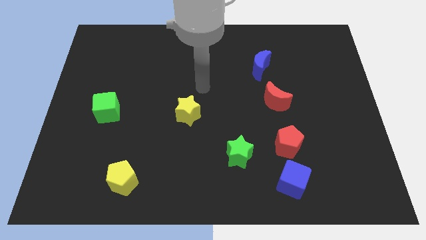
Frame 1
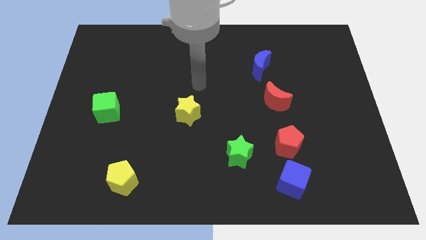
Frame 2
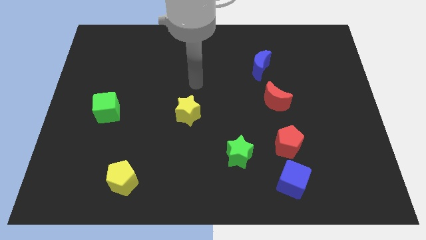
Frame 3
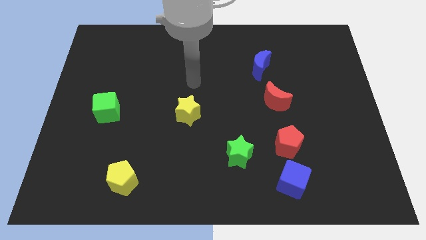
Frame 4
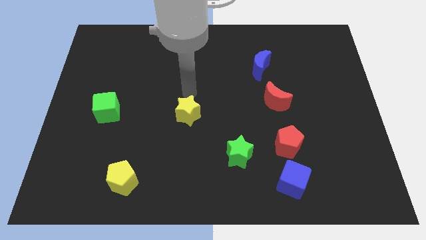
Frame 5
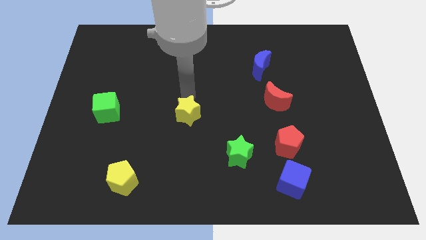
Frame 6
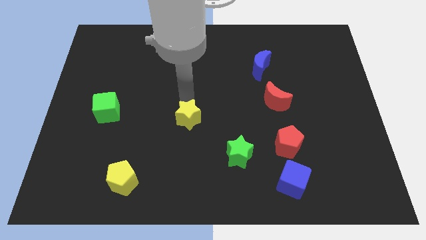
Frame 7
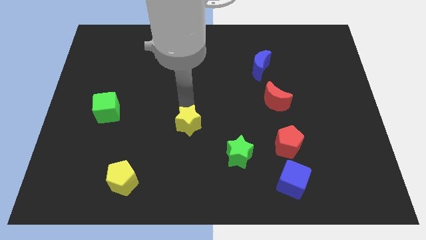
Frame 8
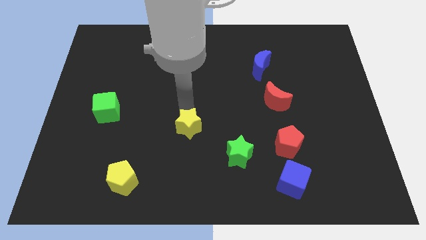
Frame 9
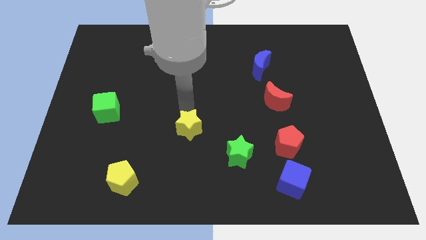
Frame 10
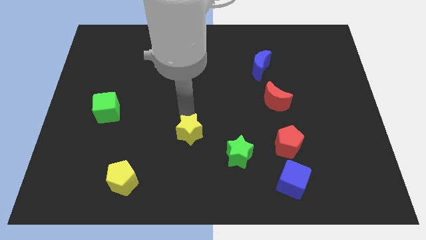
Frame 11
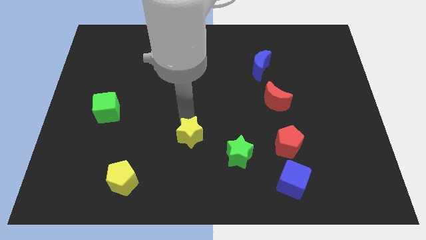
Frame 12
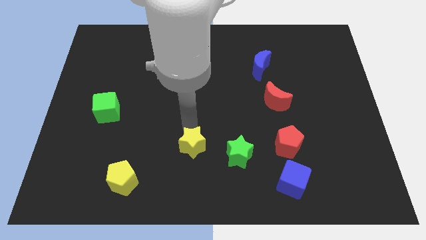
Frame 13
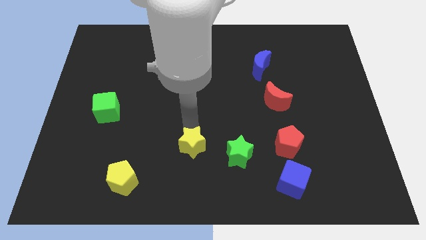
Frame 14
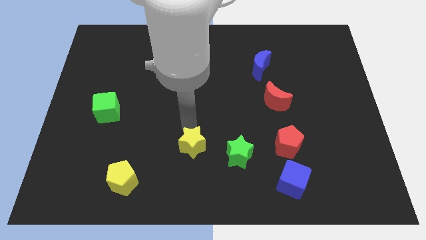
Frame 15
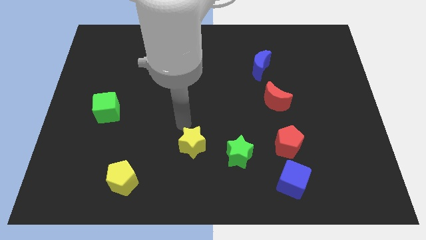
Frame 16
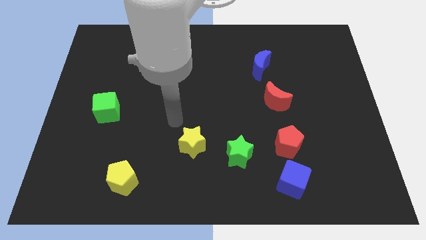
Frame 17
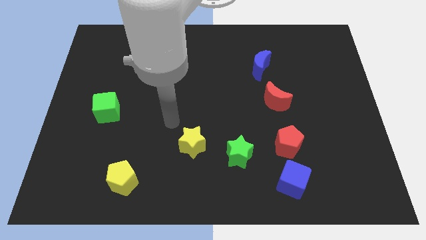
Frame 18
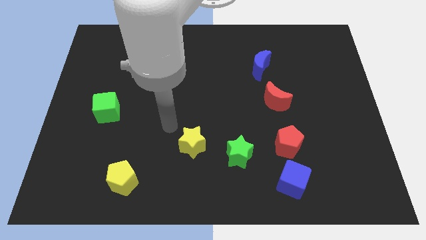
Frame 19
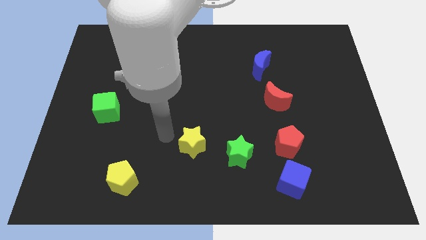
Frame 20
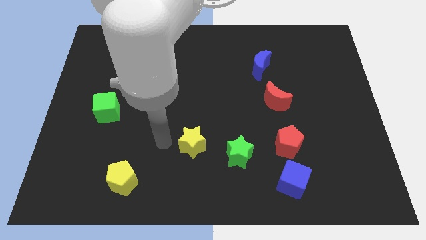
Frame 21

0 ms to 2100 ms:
move the yellow star to the left of the green star

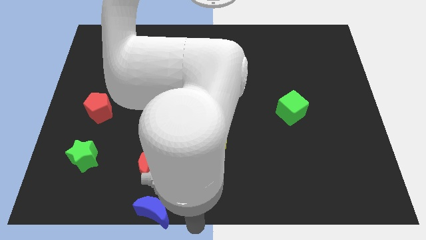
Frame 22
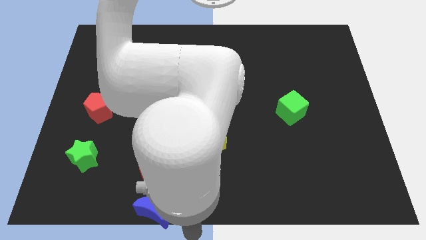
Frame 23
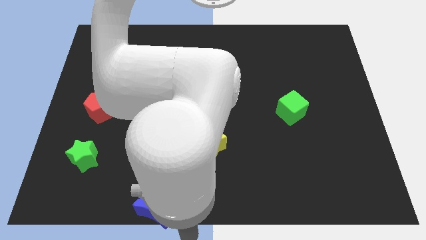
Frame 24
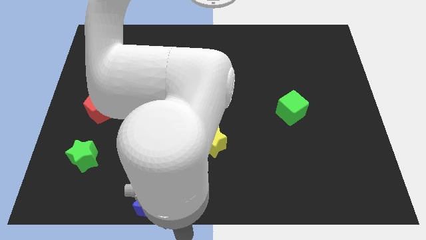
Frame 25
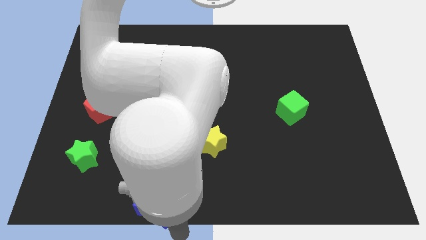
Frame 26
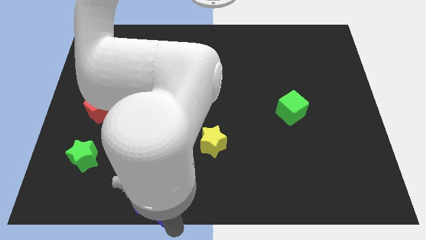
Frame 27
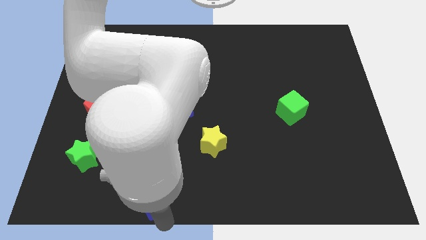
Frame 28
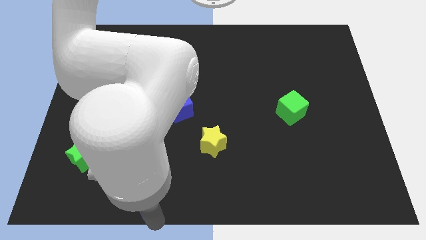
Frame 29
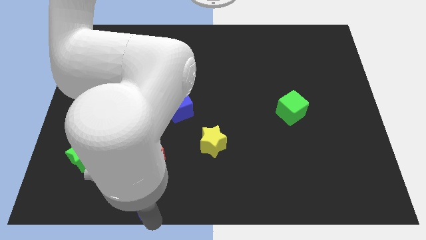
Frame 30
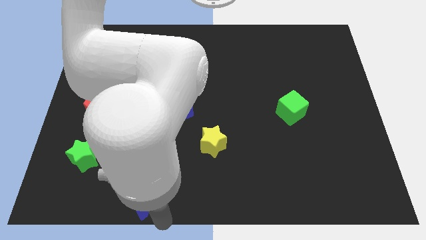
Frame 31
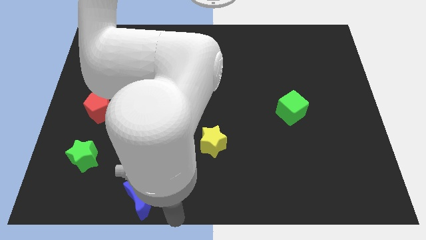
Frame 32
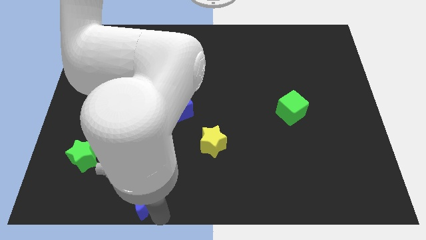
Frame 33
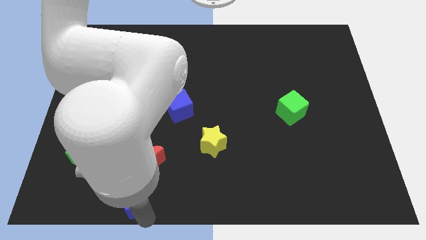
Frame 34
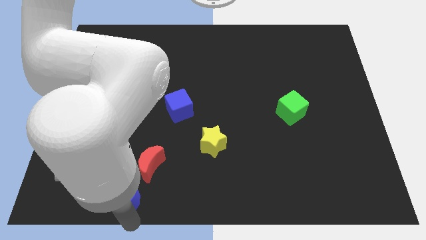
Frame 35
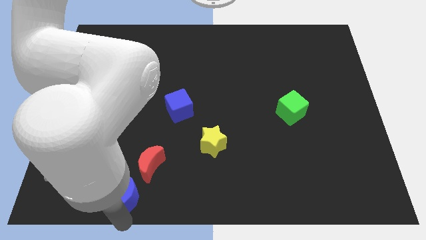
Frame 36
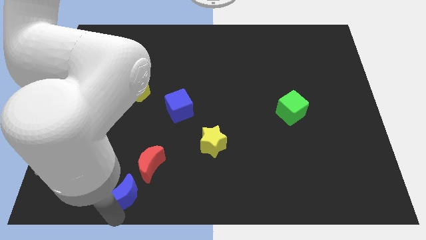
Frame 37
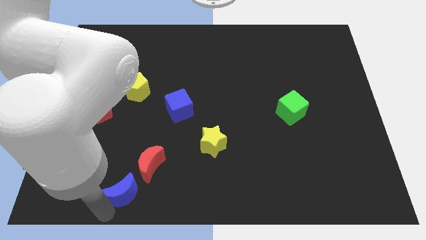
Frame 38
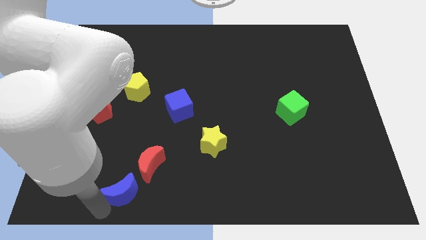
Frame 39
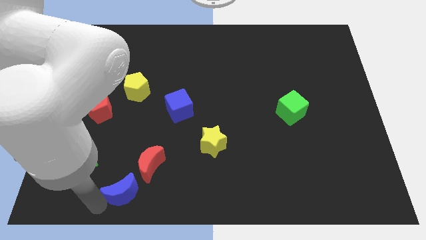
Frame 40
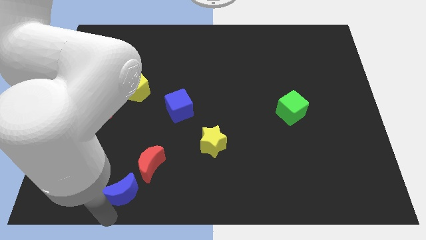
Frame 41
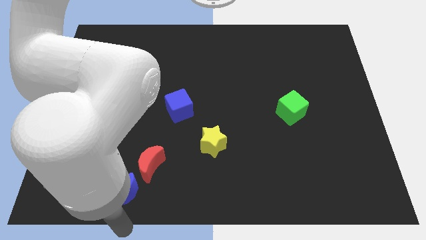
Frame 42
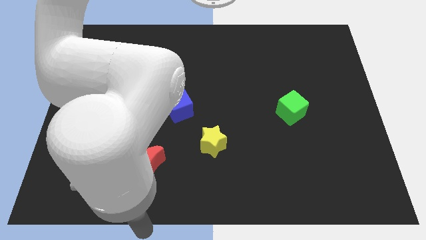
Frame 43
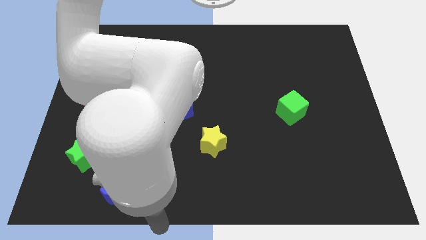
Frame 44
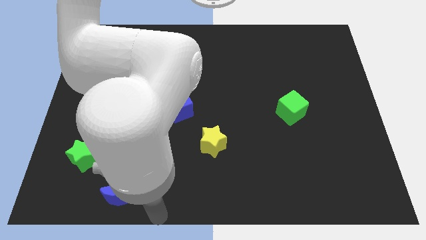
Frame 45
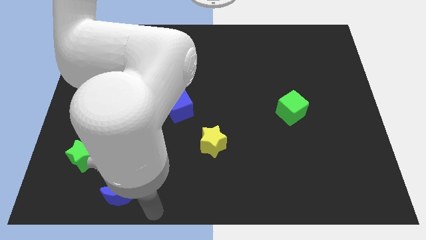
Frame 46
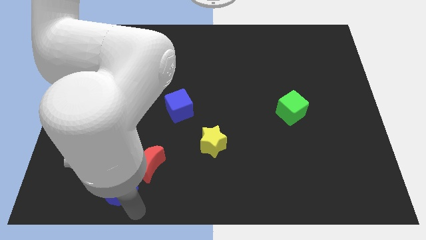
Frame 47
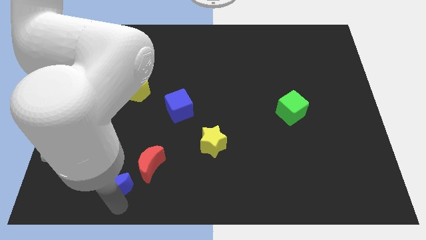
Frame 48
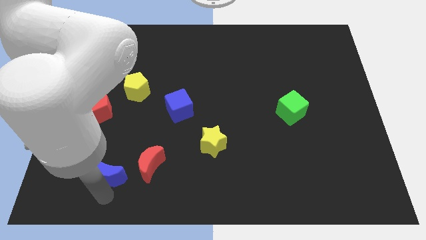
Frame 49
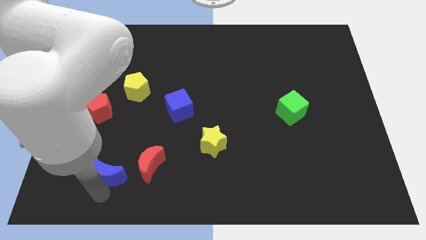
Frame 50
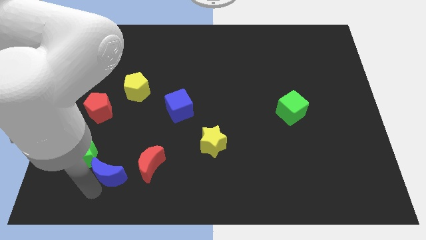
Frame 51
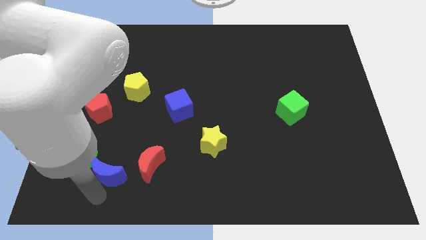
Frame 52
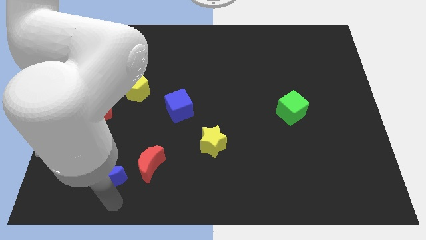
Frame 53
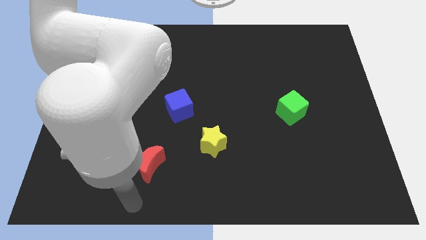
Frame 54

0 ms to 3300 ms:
place the blue moon to the left of red crescent

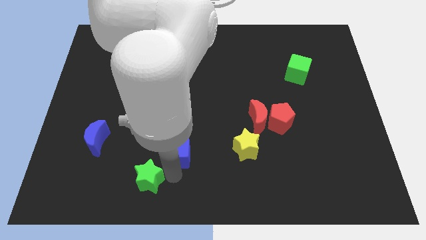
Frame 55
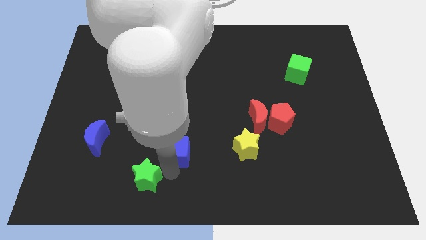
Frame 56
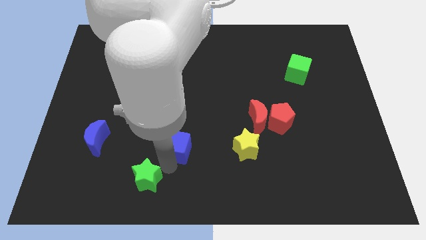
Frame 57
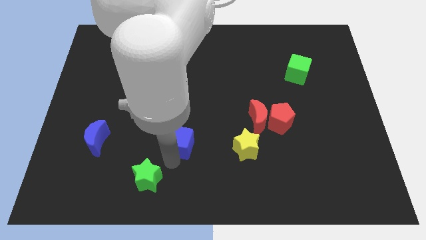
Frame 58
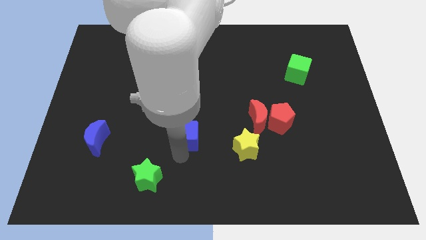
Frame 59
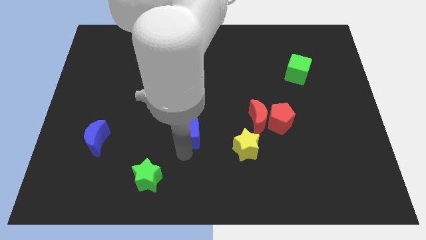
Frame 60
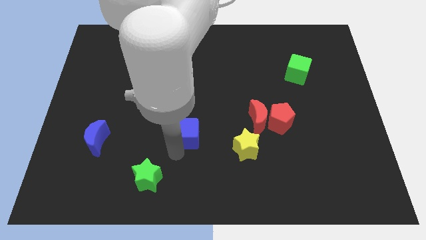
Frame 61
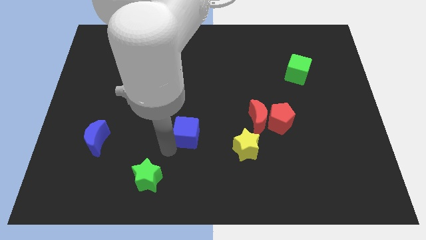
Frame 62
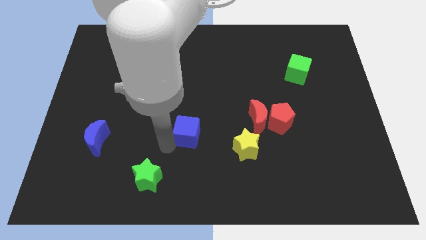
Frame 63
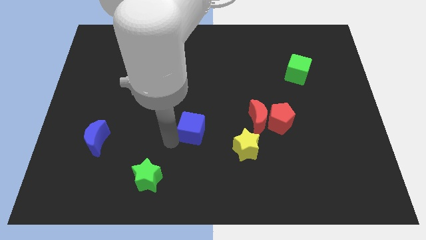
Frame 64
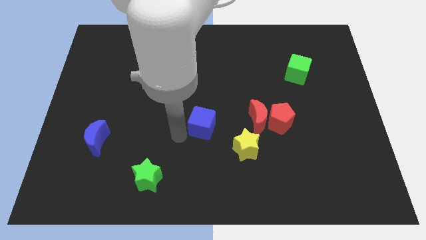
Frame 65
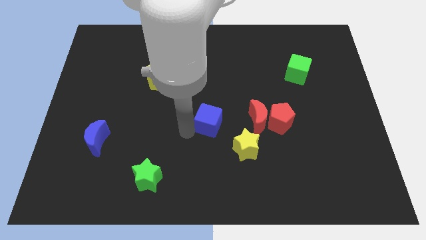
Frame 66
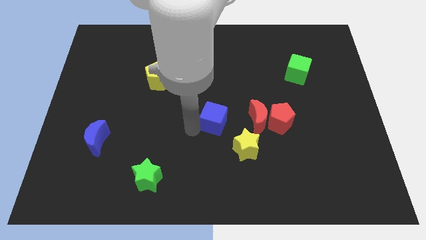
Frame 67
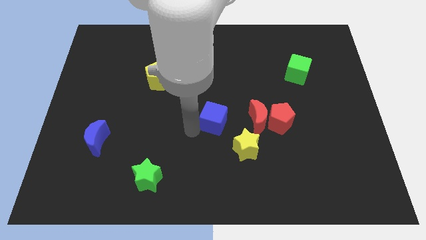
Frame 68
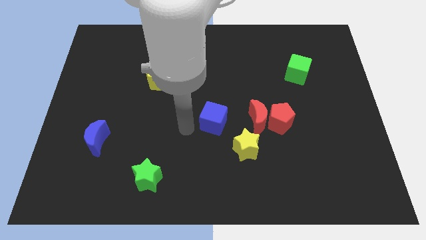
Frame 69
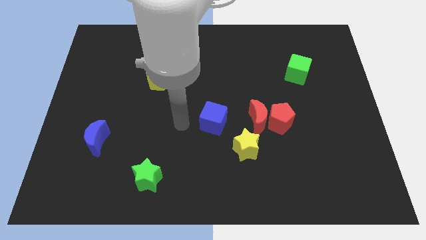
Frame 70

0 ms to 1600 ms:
move the blue cube at the center

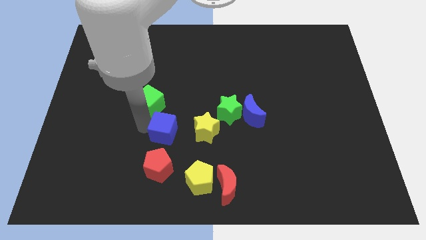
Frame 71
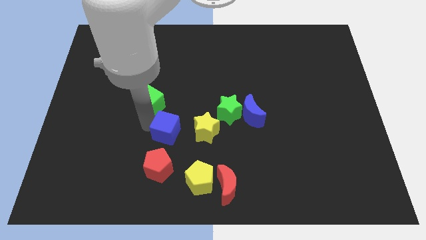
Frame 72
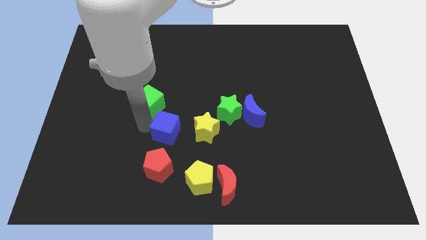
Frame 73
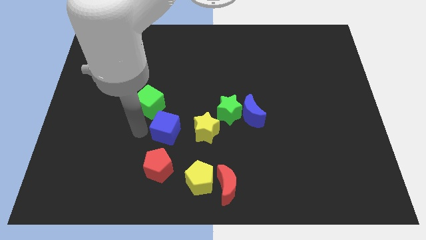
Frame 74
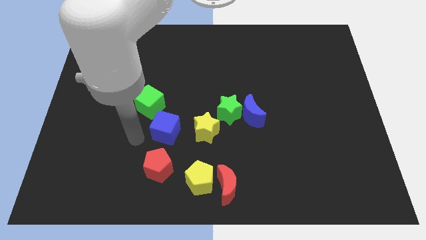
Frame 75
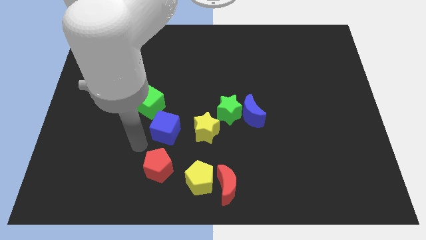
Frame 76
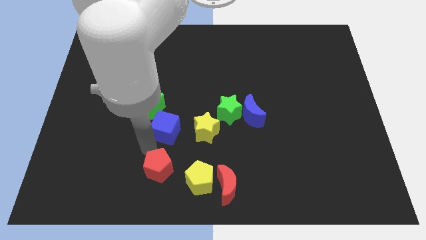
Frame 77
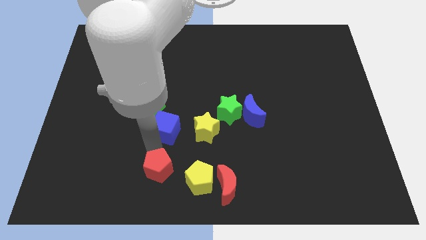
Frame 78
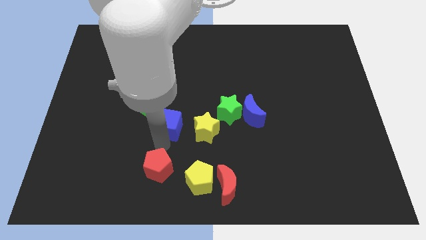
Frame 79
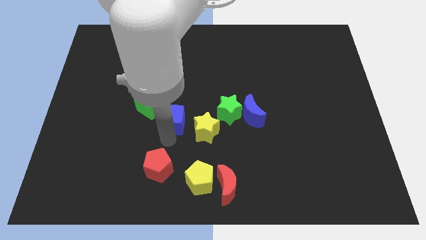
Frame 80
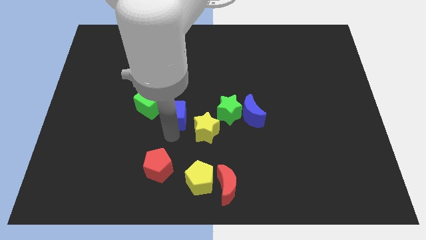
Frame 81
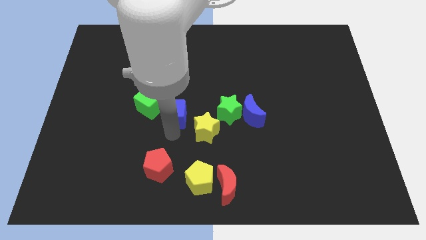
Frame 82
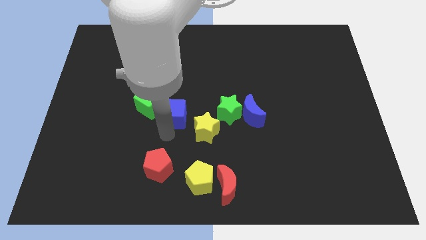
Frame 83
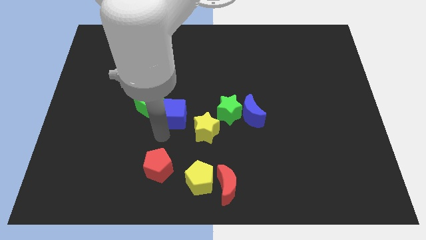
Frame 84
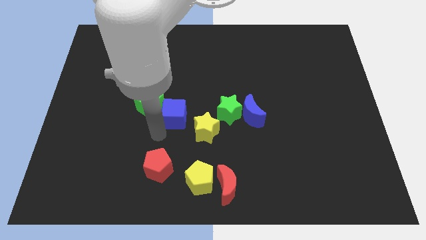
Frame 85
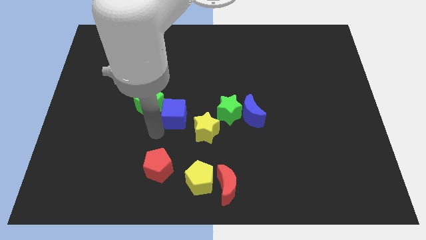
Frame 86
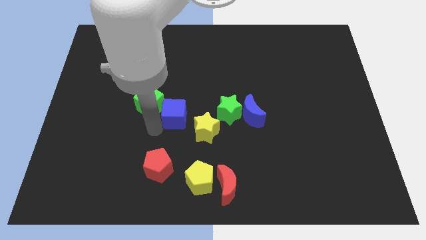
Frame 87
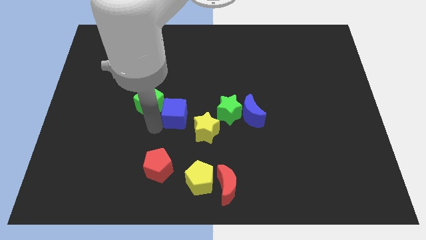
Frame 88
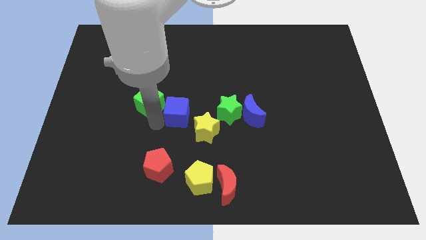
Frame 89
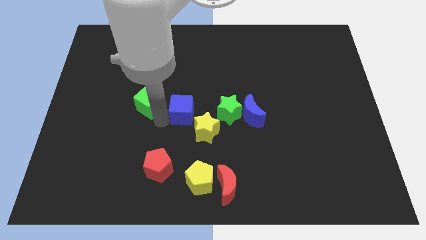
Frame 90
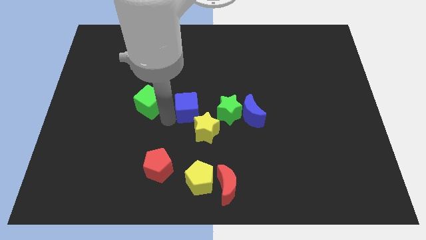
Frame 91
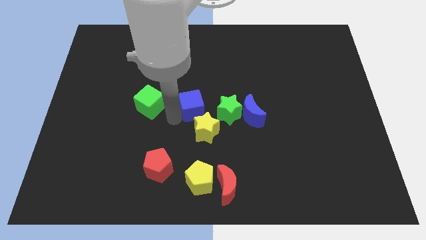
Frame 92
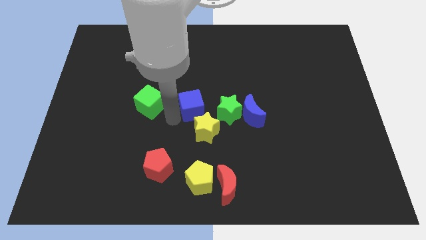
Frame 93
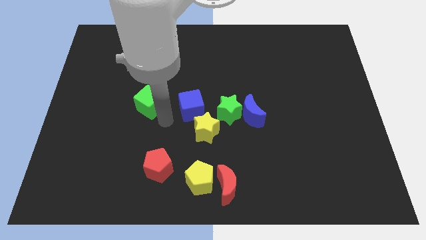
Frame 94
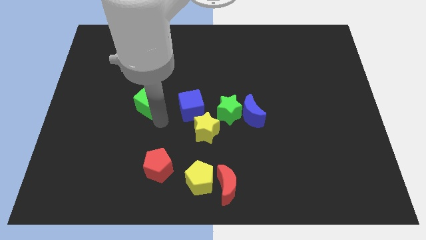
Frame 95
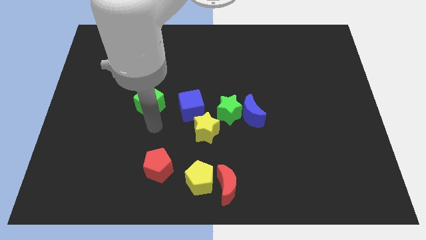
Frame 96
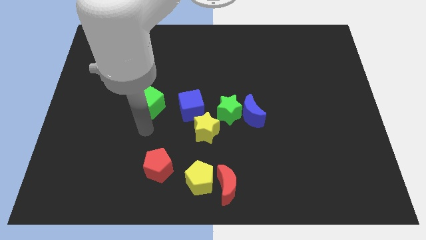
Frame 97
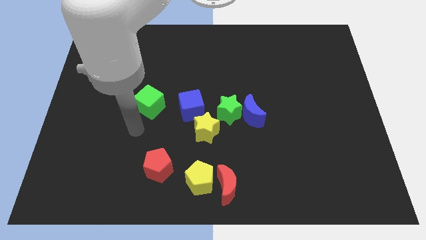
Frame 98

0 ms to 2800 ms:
move the blue cube parallel to the right of the green cube
